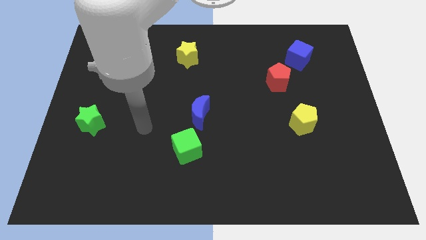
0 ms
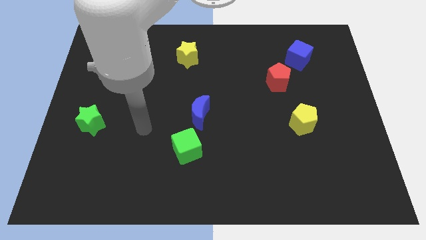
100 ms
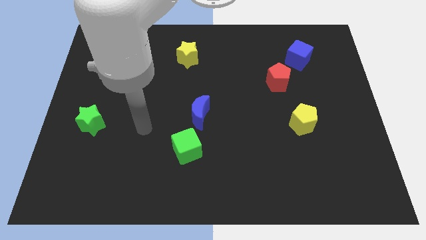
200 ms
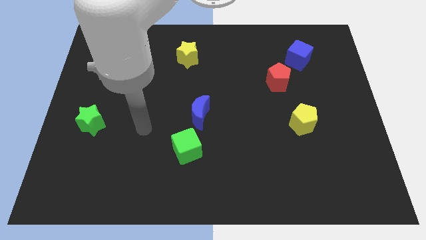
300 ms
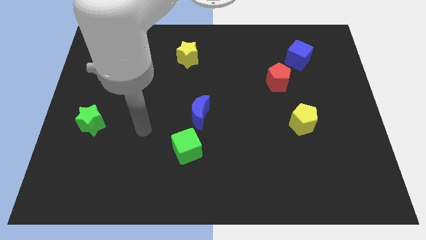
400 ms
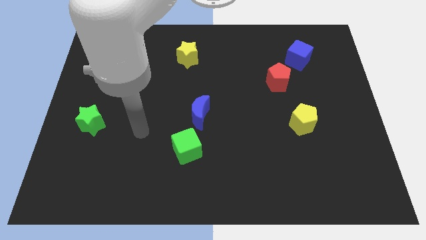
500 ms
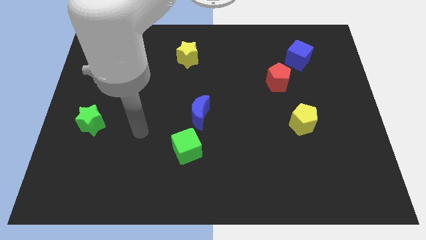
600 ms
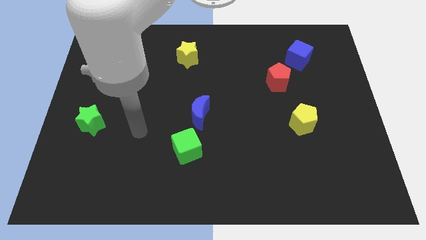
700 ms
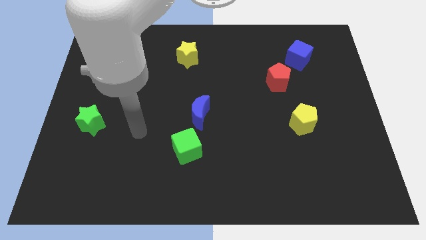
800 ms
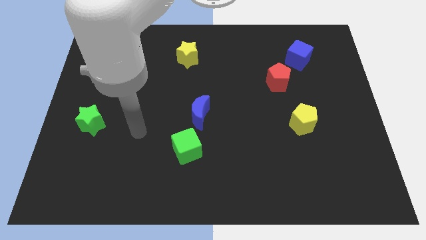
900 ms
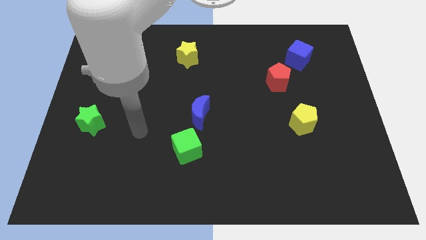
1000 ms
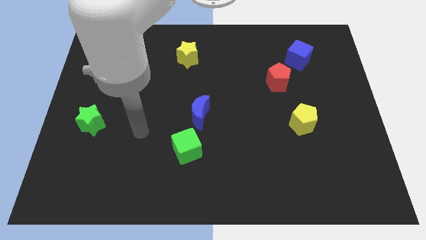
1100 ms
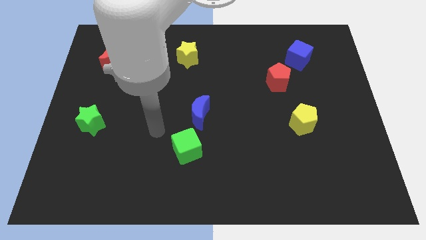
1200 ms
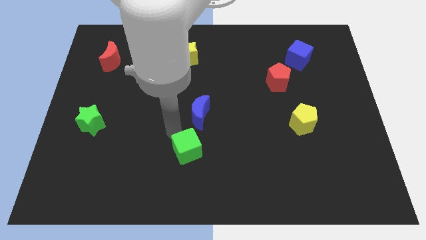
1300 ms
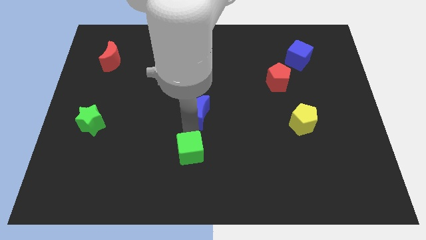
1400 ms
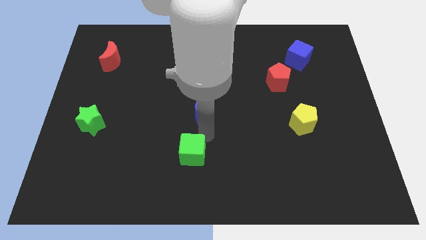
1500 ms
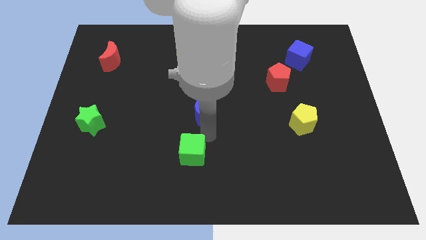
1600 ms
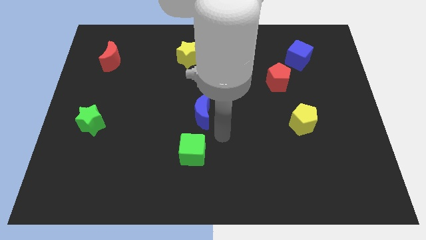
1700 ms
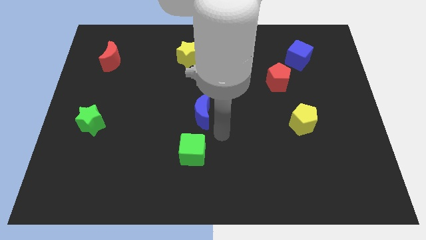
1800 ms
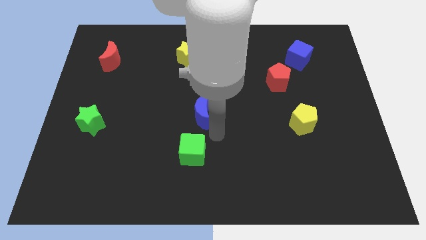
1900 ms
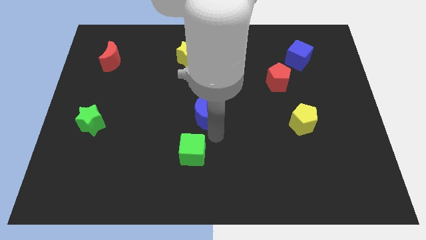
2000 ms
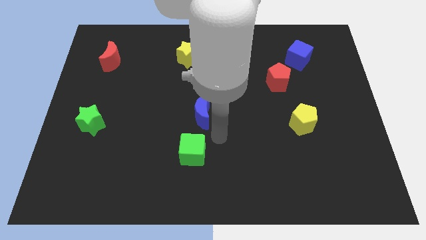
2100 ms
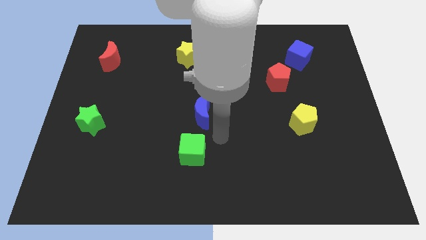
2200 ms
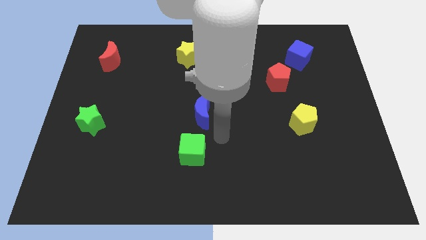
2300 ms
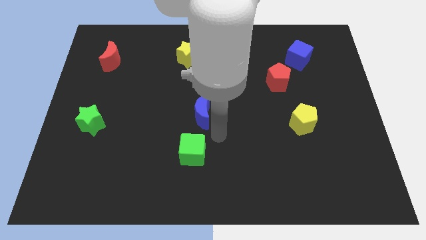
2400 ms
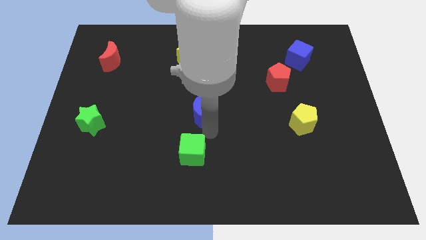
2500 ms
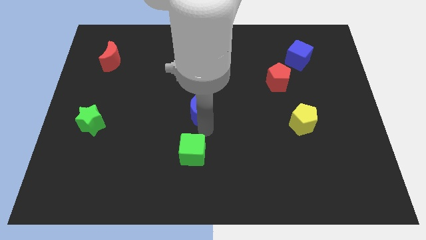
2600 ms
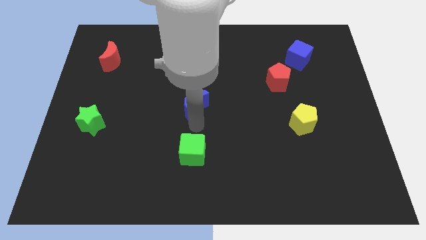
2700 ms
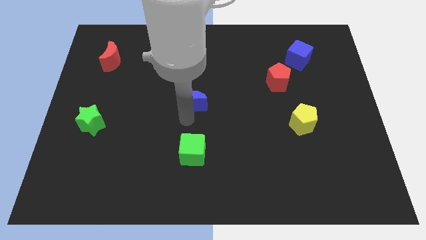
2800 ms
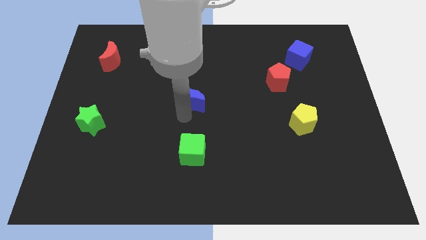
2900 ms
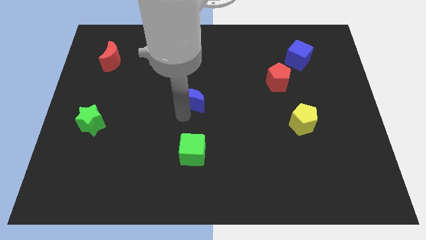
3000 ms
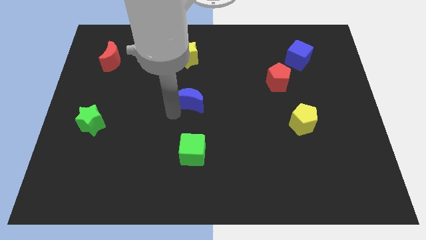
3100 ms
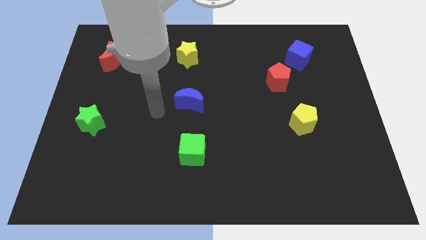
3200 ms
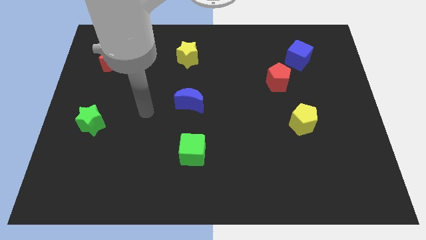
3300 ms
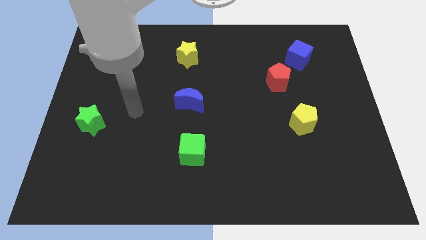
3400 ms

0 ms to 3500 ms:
place the blue crescent in between the yellow star and green cube

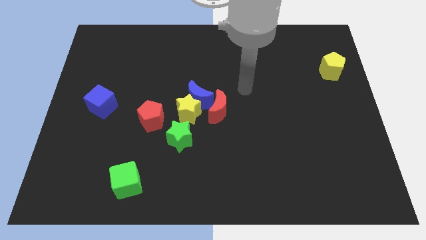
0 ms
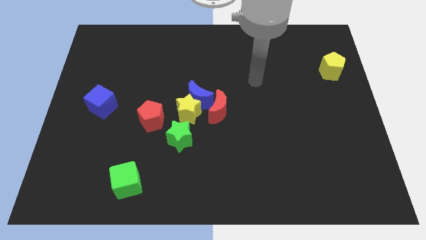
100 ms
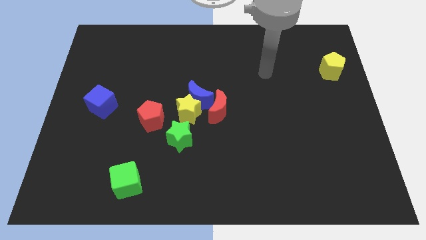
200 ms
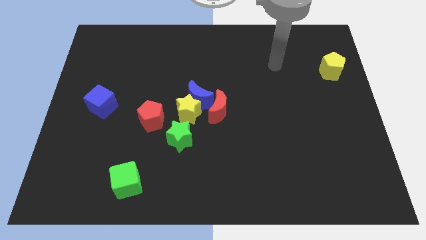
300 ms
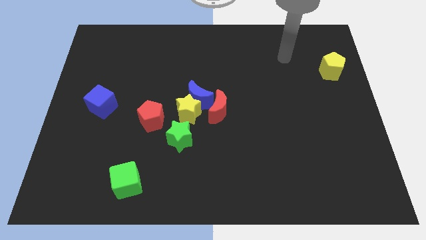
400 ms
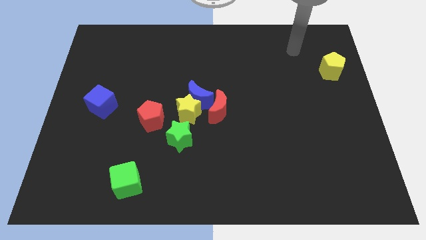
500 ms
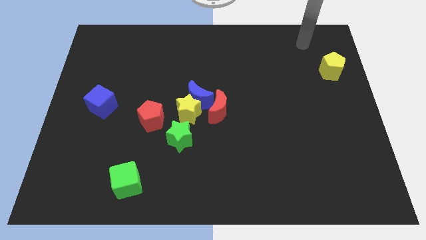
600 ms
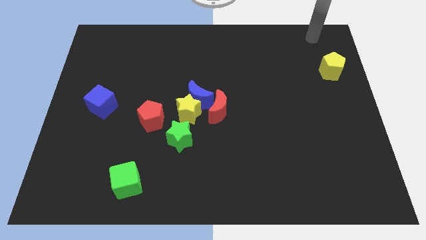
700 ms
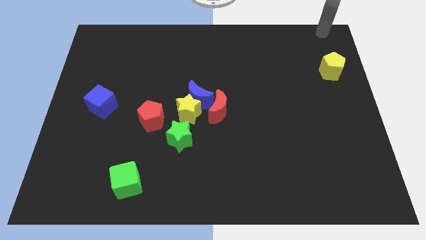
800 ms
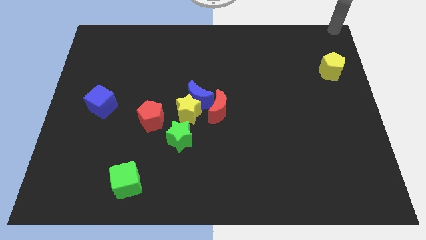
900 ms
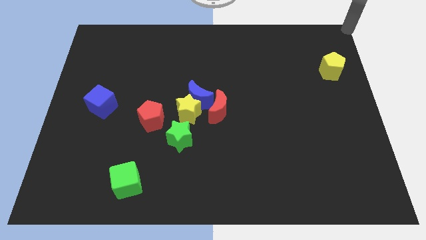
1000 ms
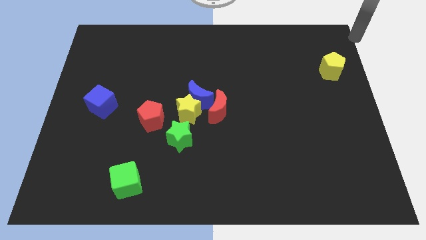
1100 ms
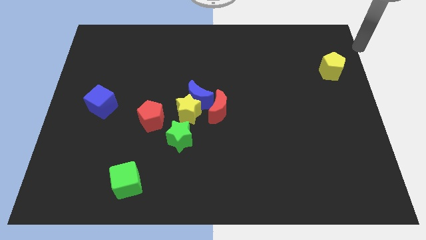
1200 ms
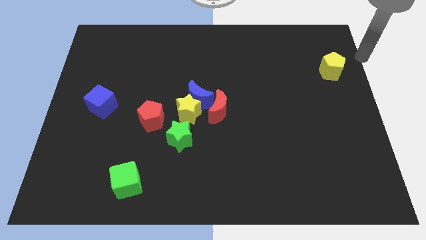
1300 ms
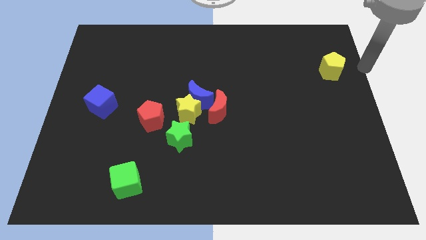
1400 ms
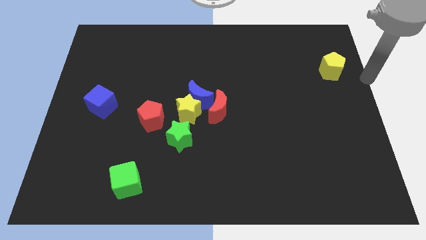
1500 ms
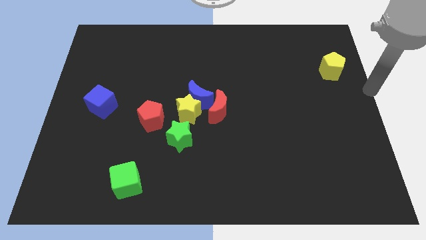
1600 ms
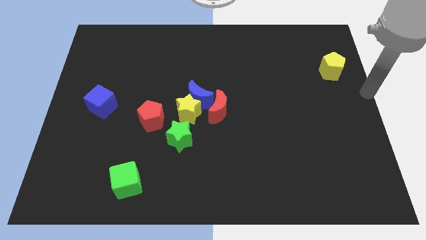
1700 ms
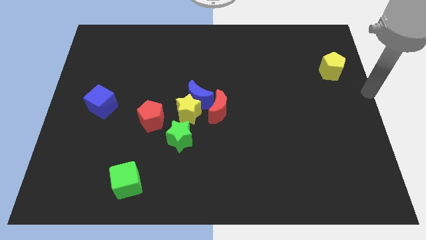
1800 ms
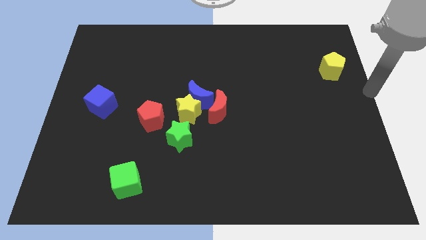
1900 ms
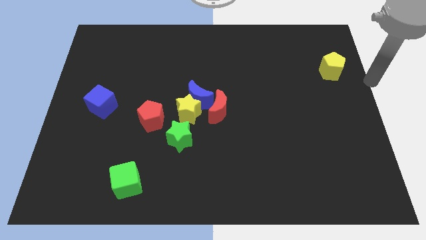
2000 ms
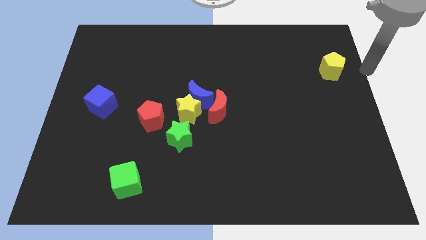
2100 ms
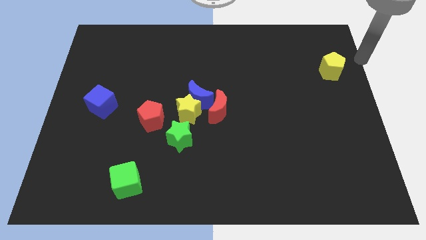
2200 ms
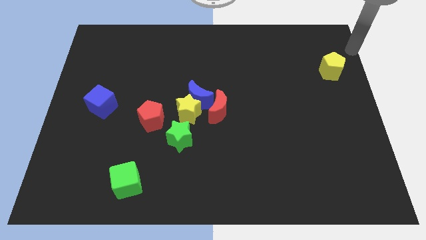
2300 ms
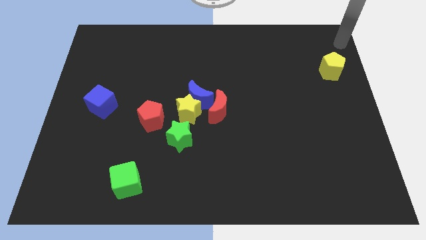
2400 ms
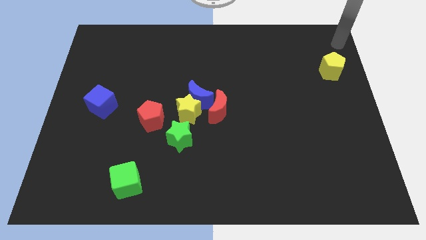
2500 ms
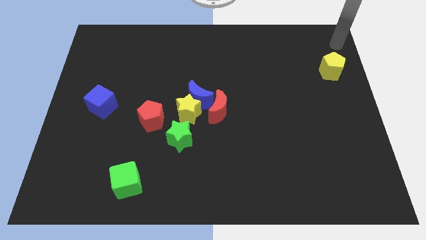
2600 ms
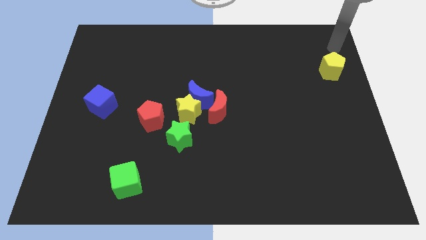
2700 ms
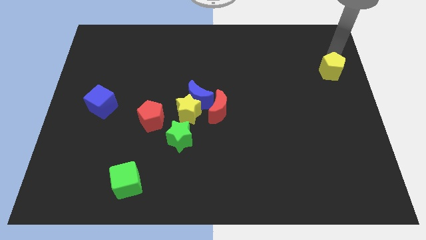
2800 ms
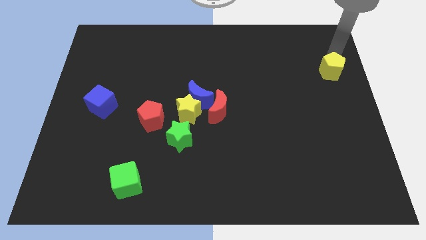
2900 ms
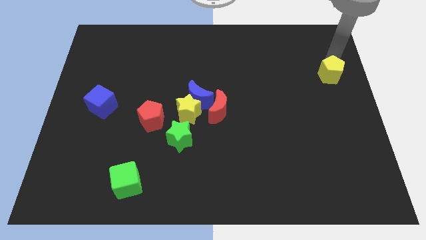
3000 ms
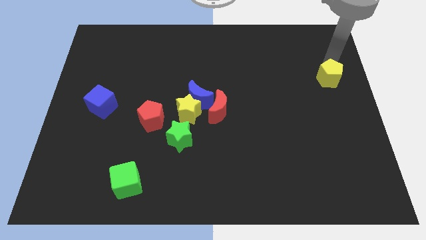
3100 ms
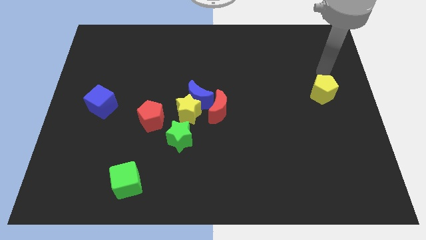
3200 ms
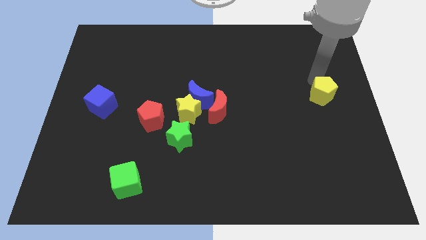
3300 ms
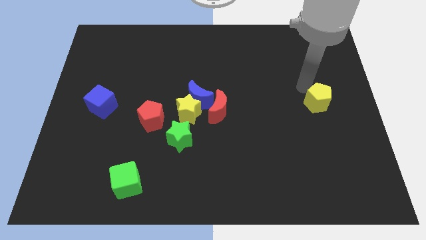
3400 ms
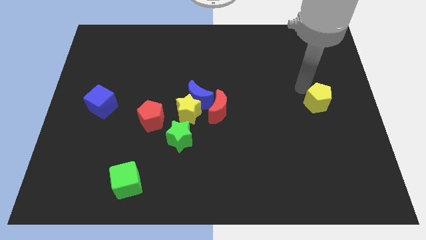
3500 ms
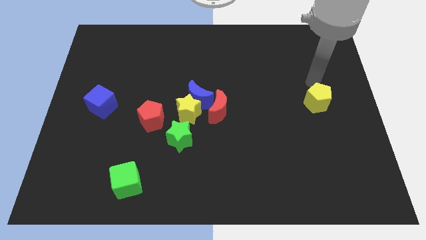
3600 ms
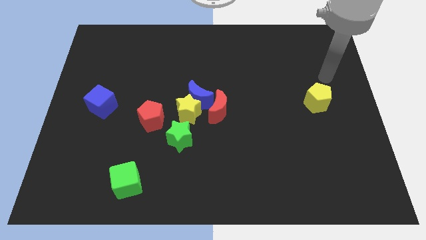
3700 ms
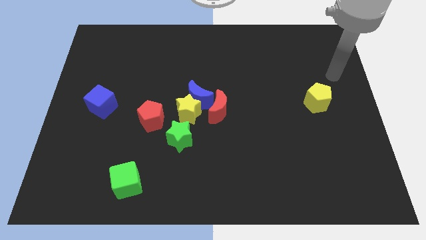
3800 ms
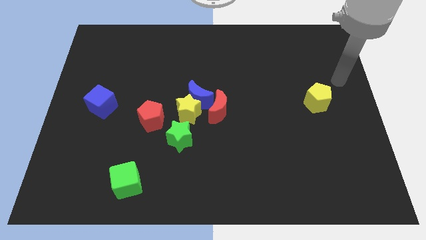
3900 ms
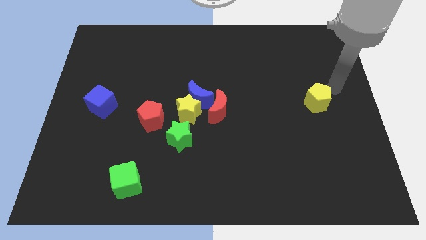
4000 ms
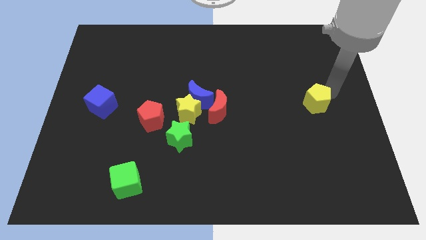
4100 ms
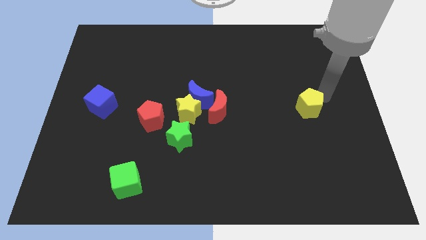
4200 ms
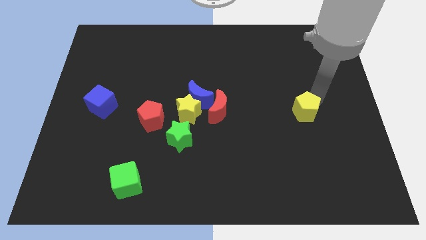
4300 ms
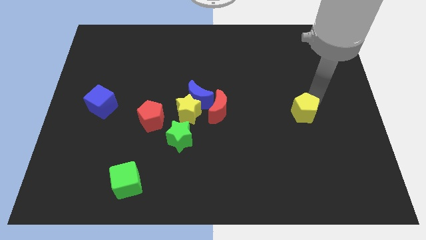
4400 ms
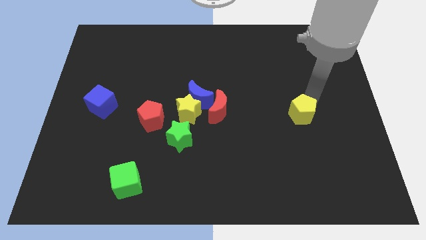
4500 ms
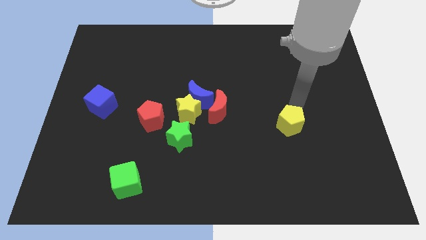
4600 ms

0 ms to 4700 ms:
push the yellow pentagon to the right of the red crescent

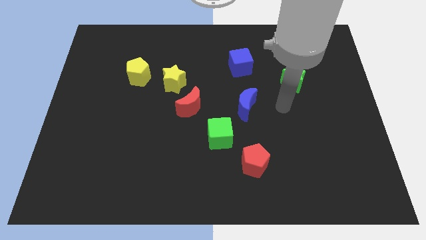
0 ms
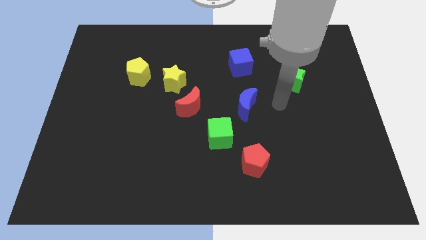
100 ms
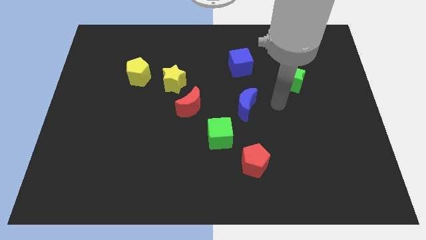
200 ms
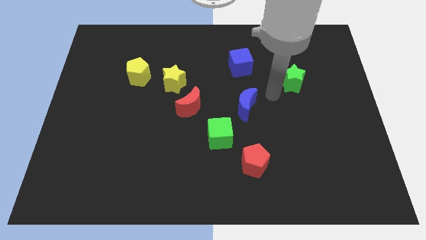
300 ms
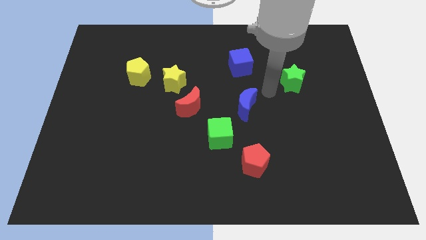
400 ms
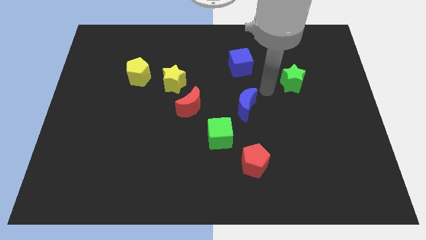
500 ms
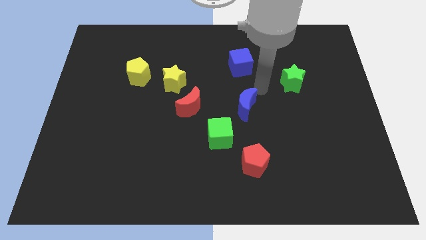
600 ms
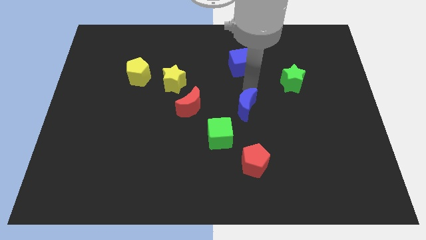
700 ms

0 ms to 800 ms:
push arm on the top of blue moon
